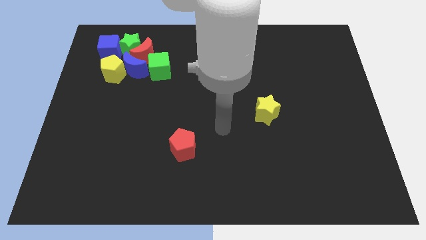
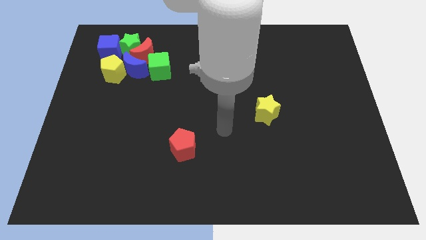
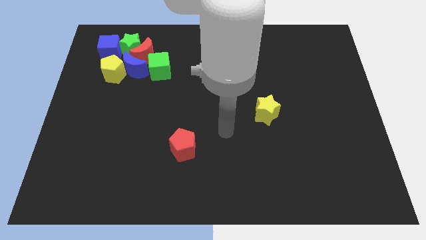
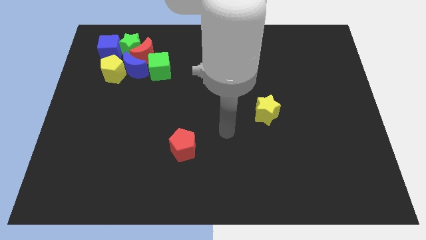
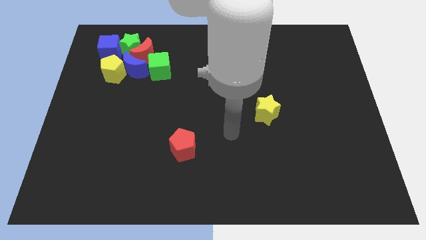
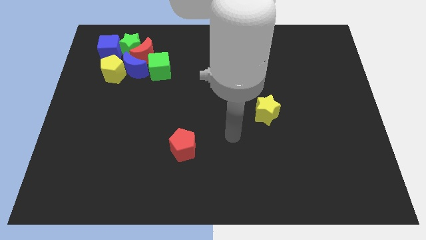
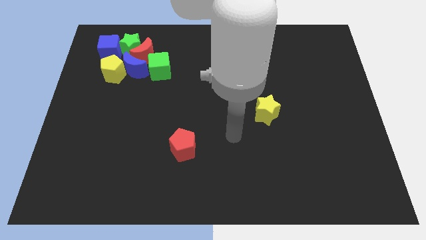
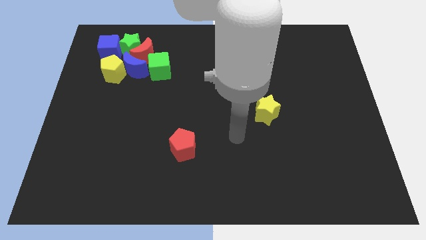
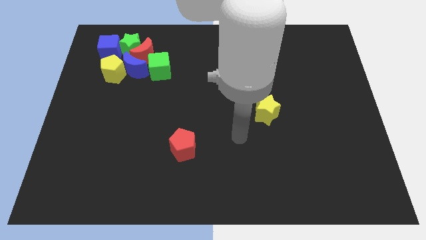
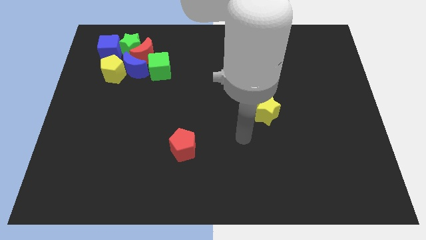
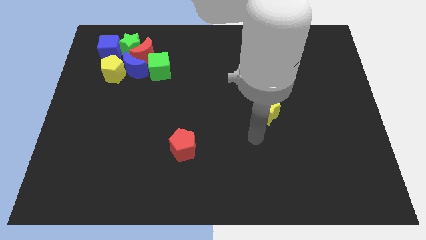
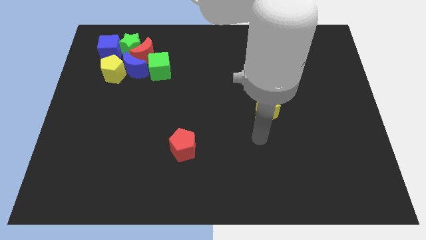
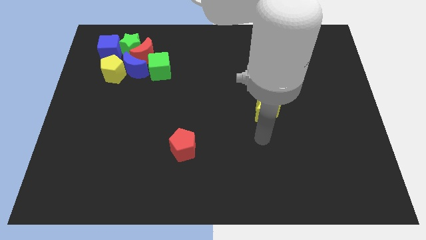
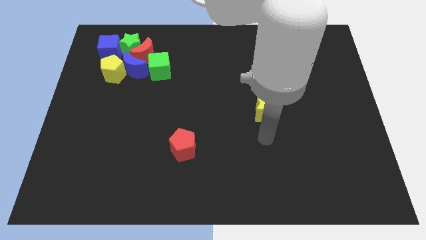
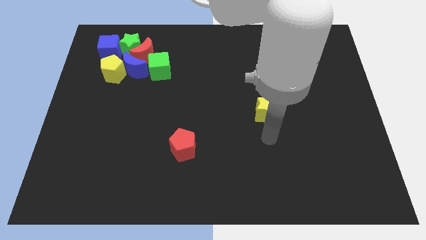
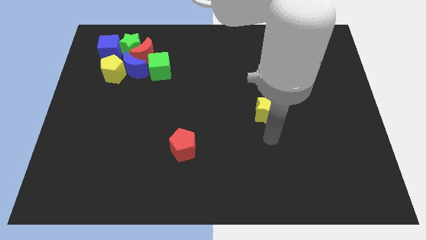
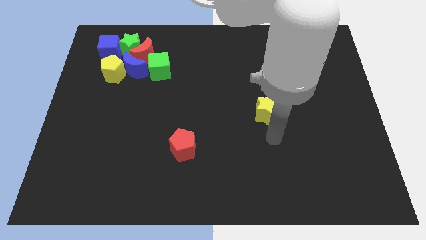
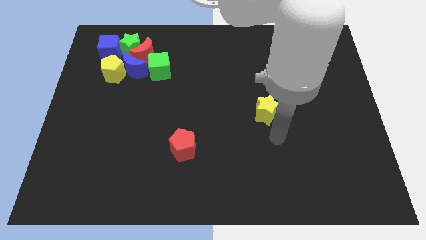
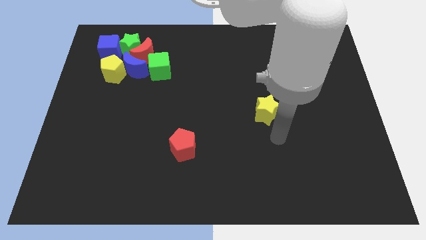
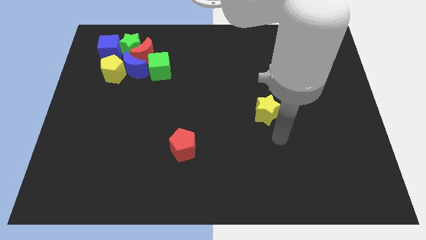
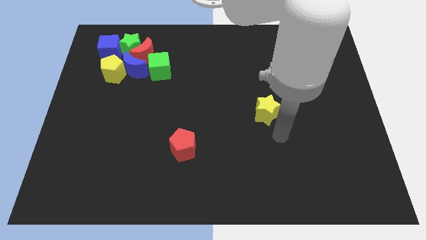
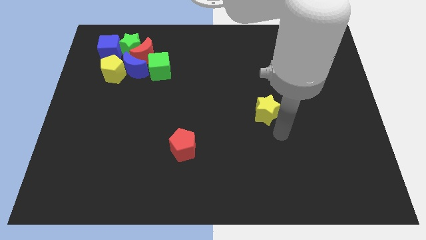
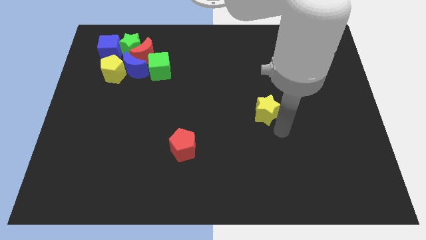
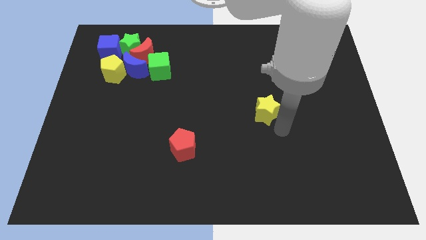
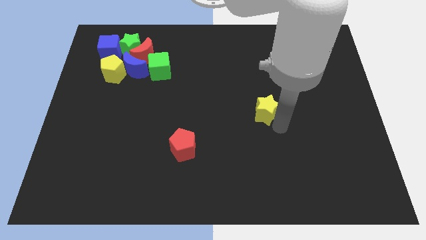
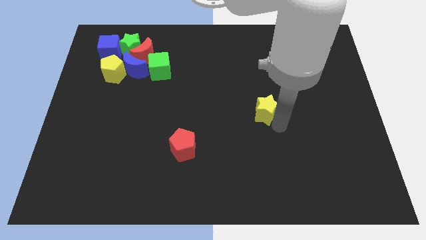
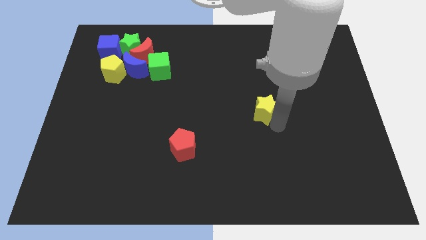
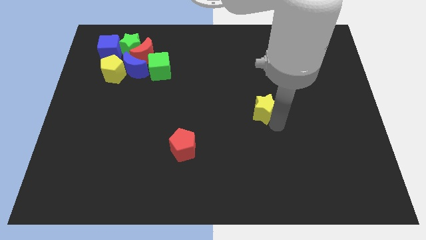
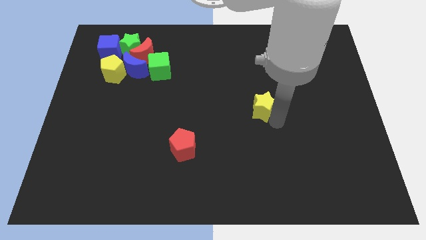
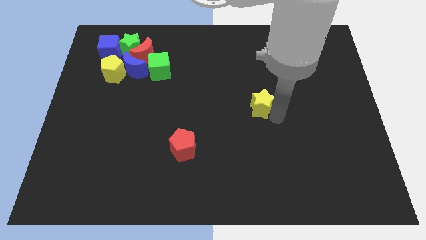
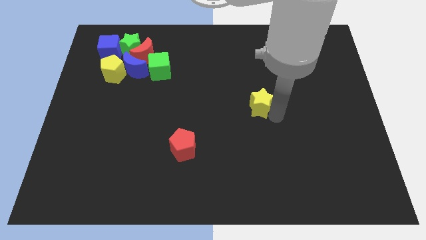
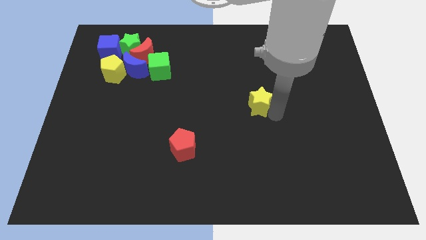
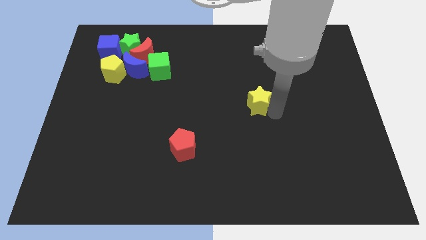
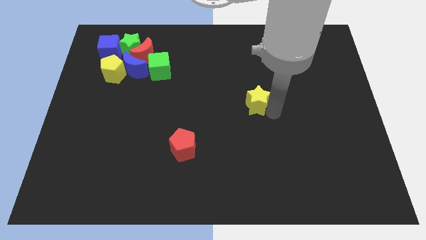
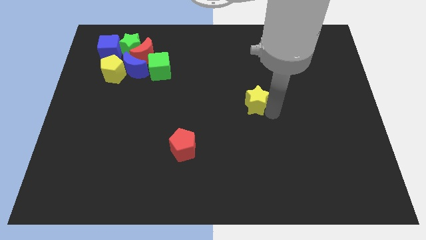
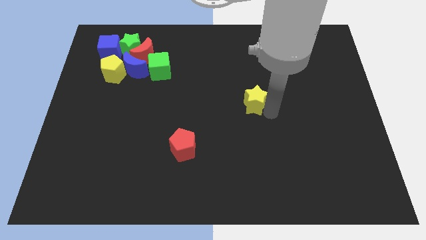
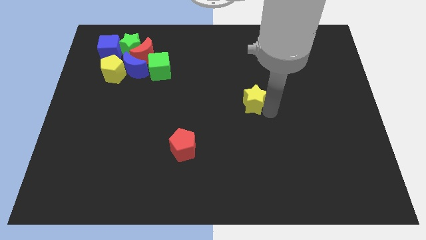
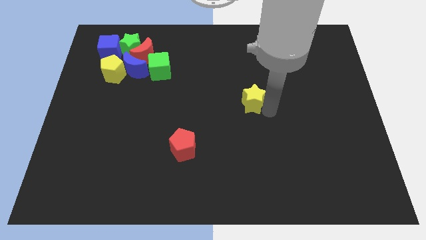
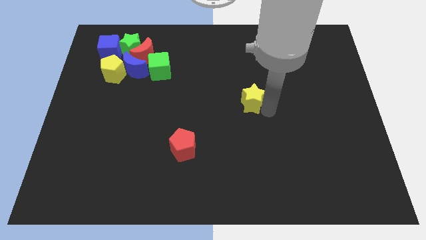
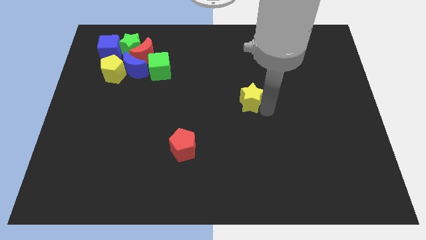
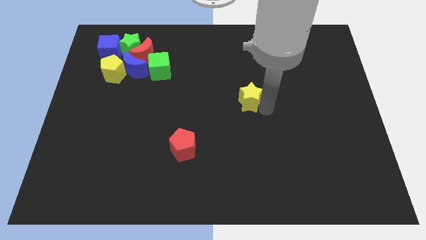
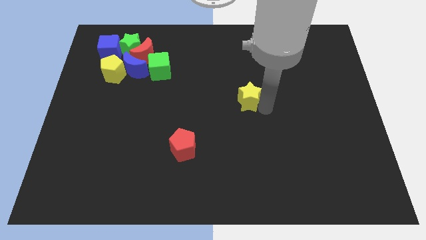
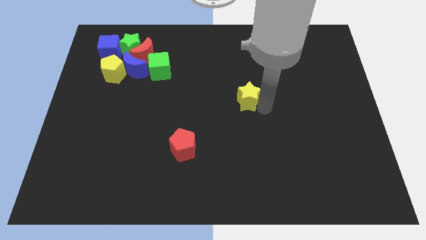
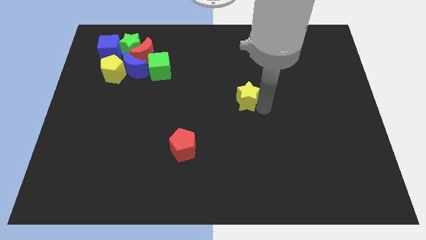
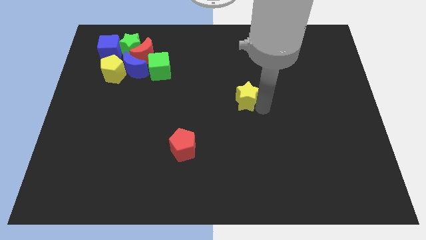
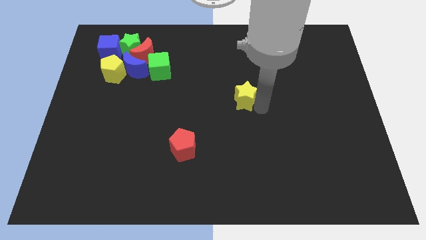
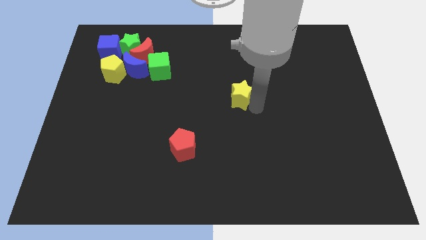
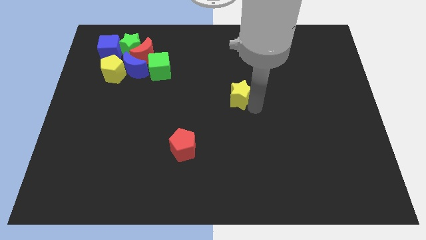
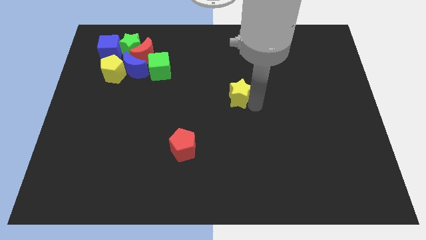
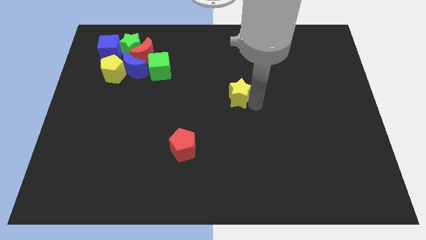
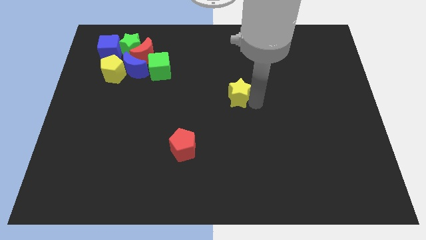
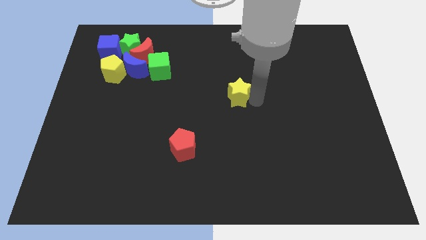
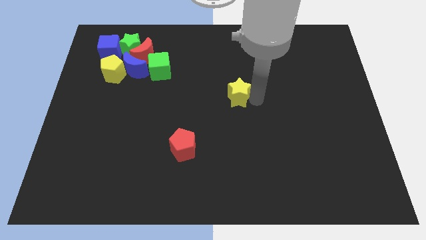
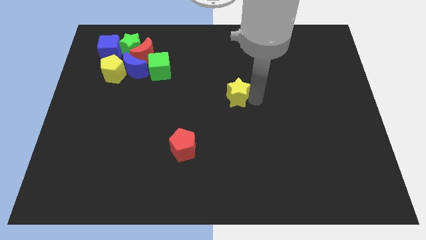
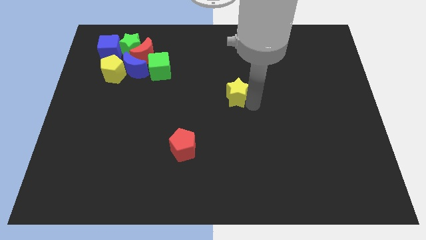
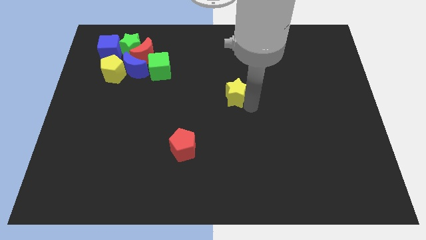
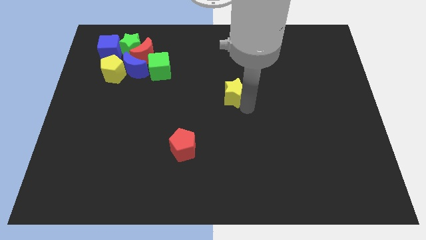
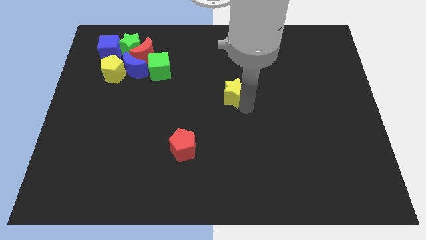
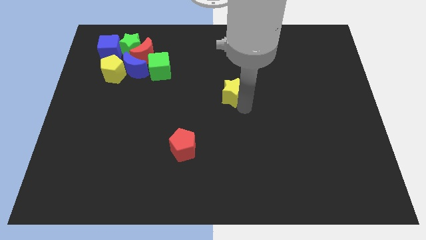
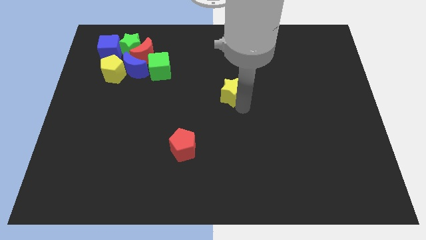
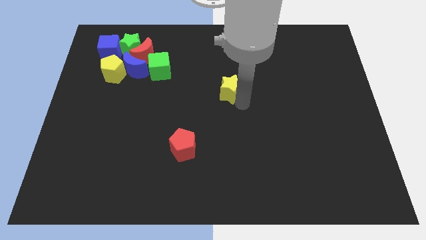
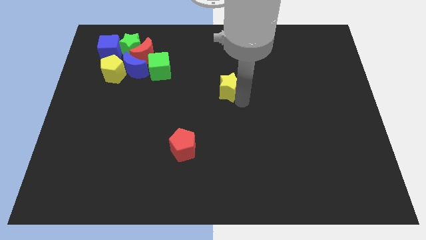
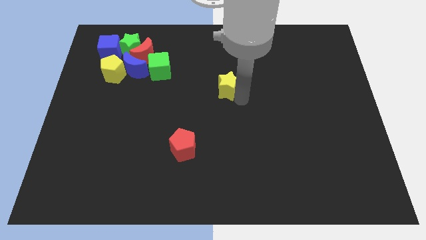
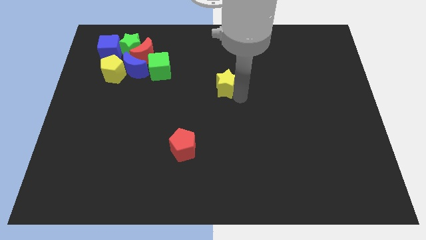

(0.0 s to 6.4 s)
slide the yellow star towards the group of blocks

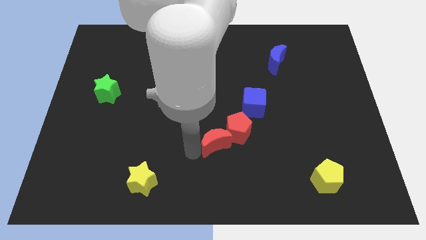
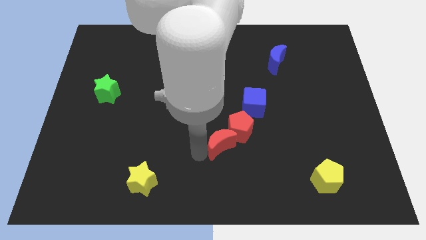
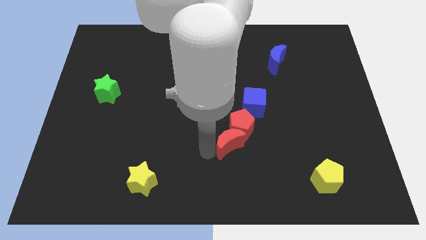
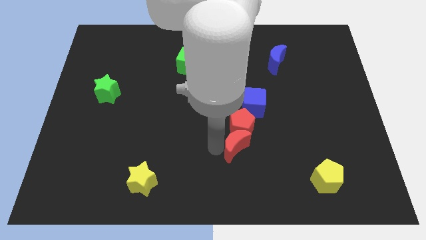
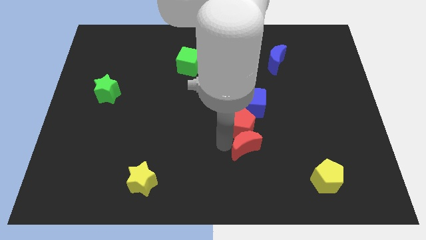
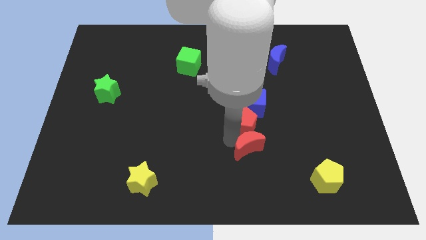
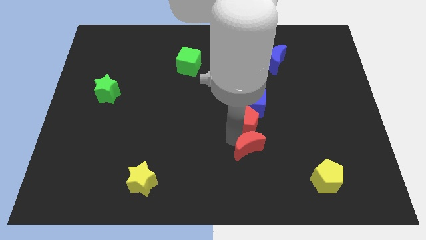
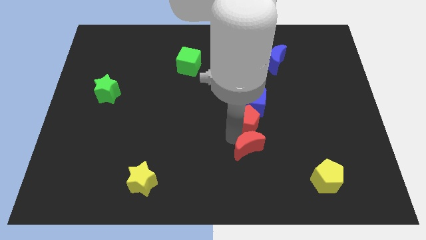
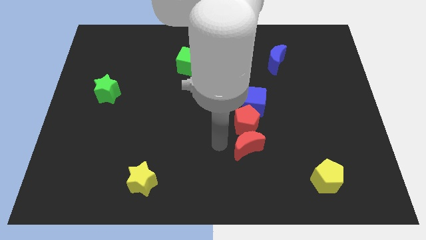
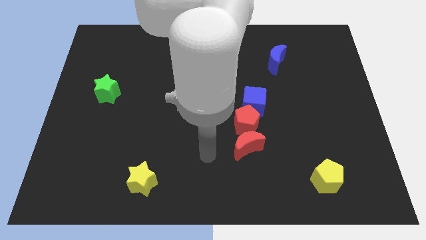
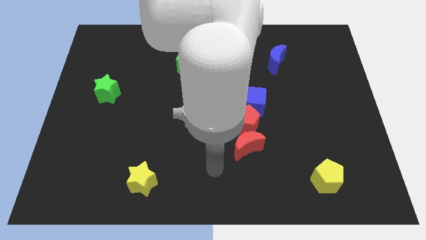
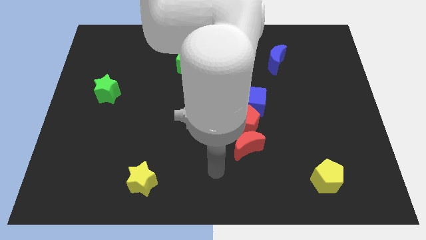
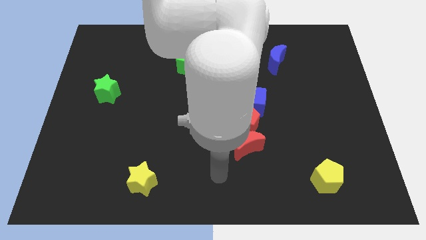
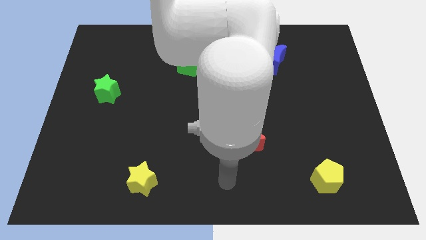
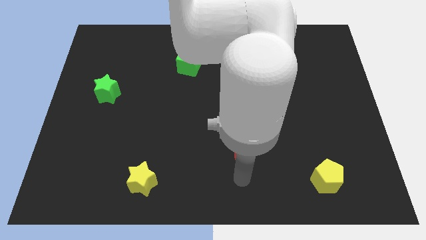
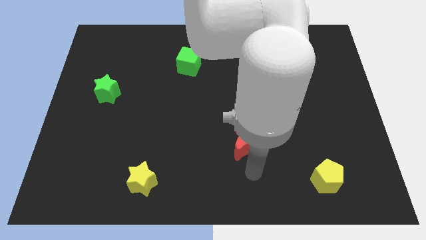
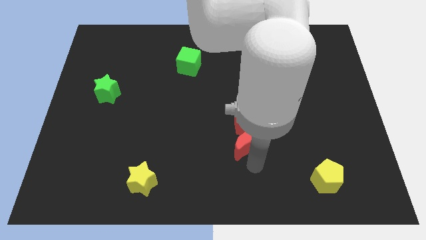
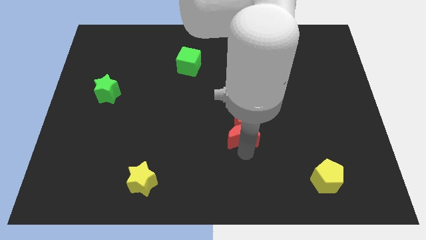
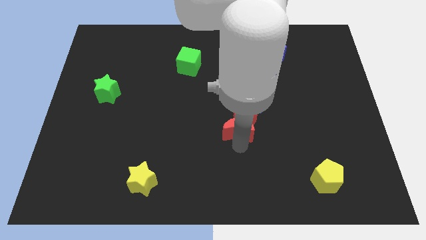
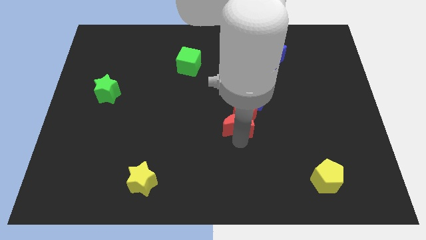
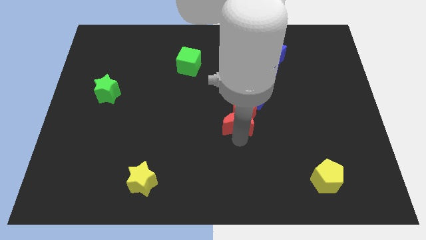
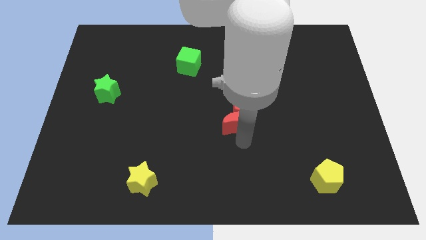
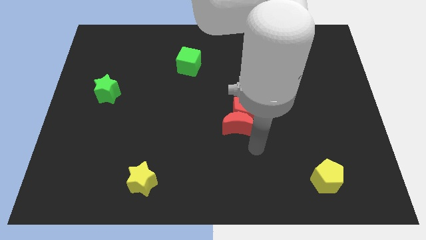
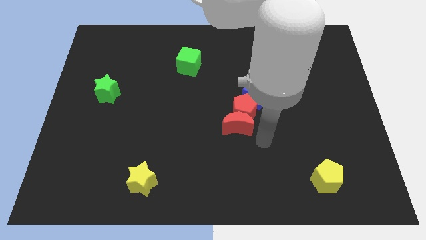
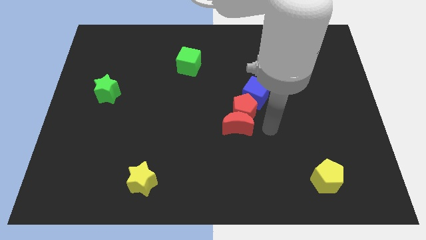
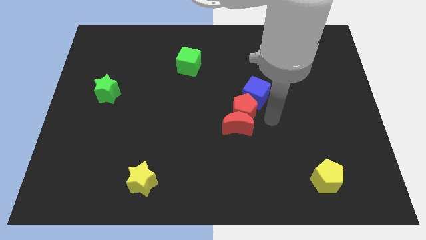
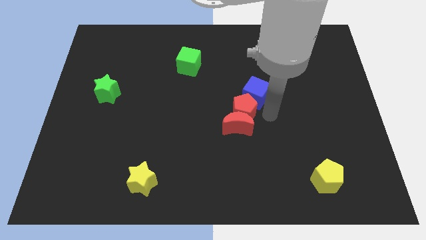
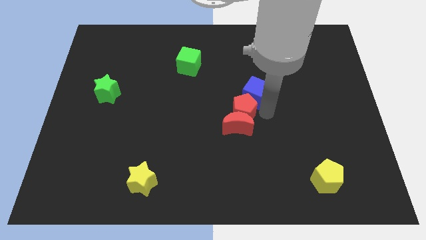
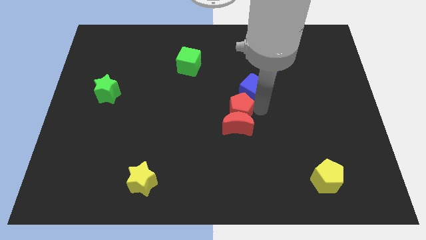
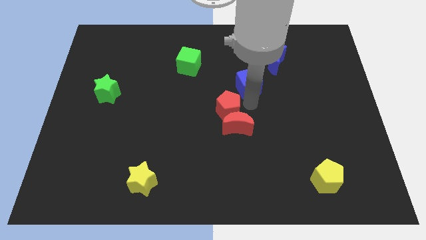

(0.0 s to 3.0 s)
push the red moon into the red pentagon
